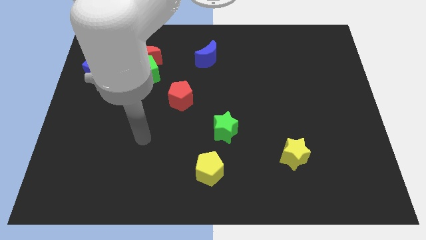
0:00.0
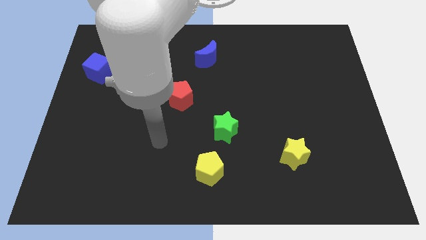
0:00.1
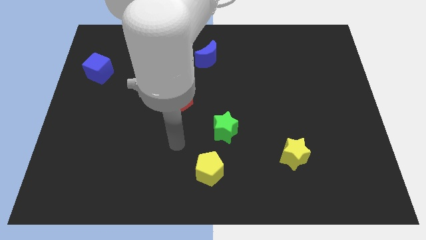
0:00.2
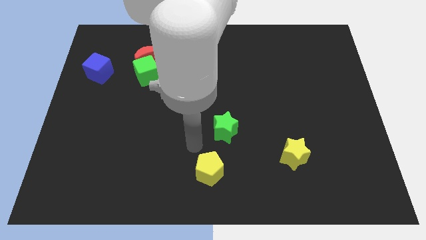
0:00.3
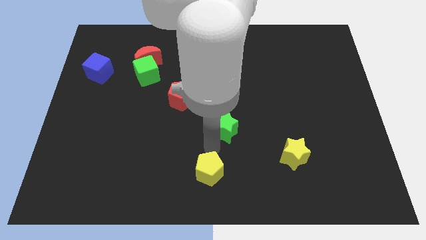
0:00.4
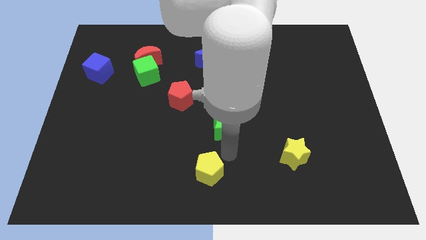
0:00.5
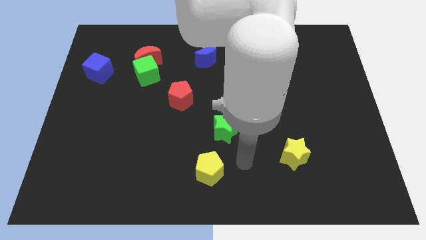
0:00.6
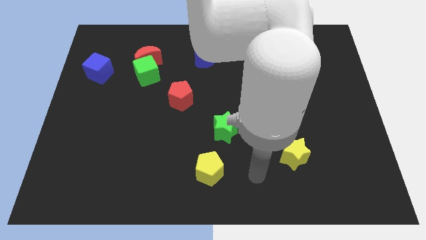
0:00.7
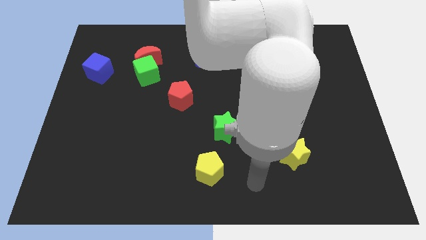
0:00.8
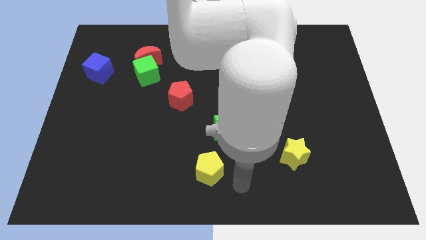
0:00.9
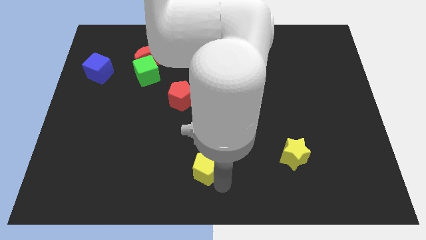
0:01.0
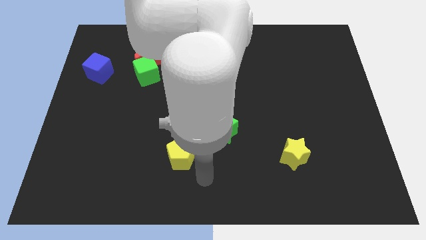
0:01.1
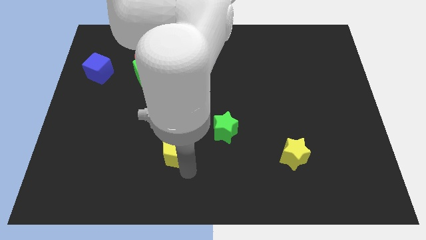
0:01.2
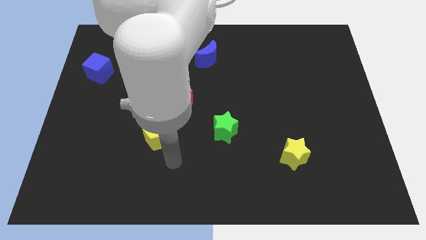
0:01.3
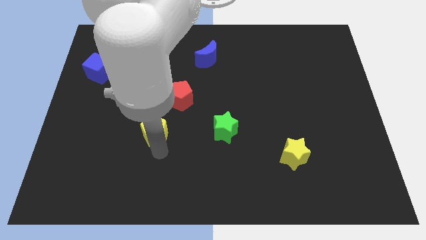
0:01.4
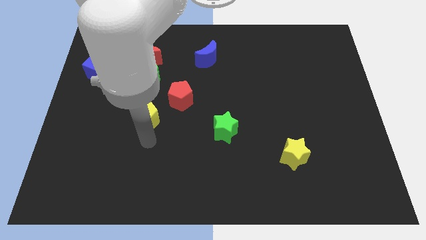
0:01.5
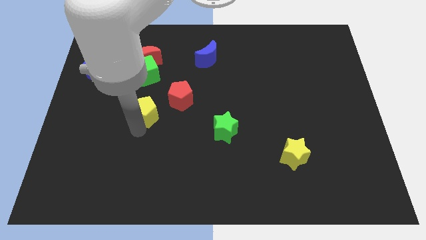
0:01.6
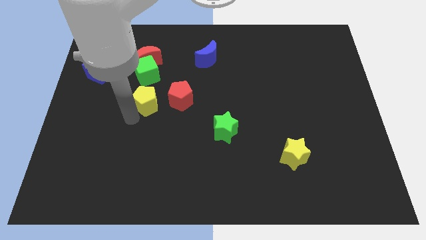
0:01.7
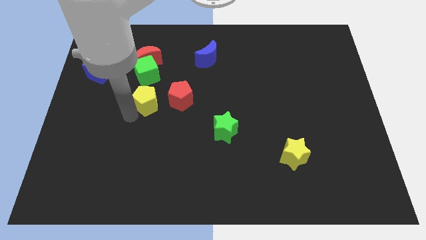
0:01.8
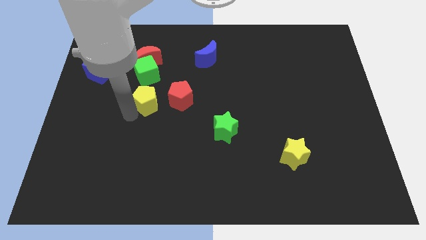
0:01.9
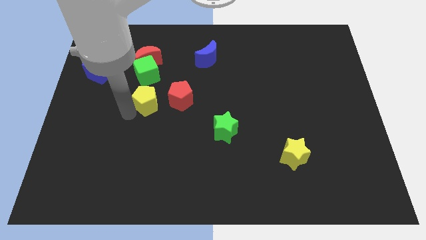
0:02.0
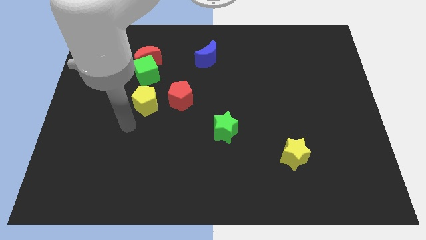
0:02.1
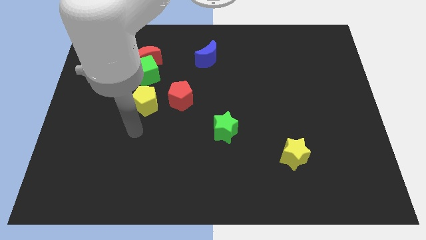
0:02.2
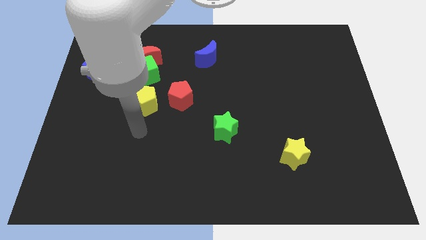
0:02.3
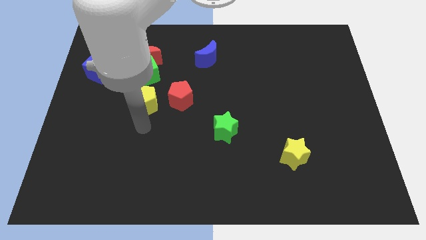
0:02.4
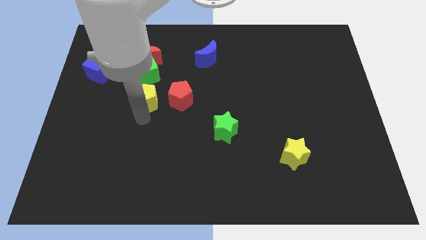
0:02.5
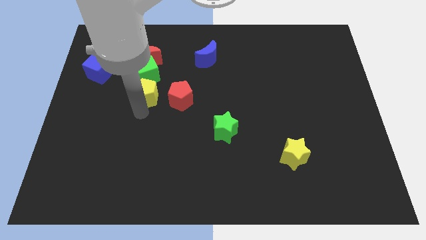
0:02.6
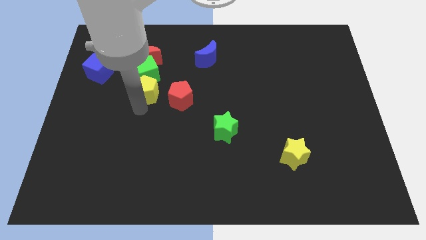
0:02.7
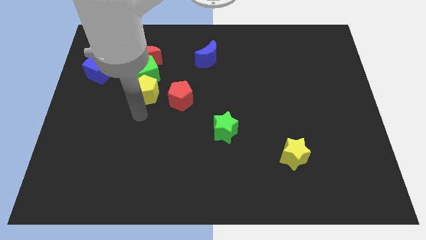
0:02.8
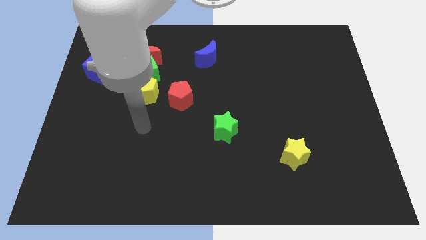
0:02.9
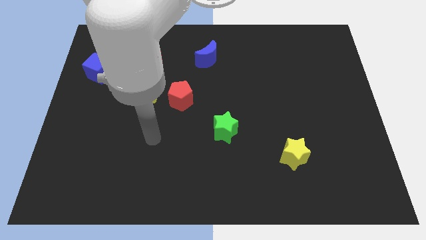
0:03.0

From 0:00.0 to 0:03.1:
move yellow pentagon below green cube

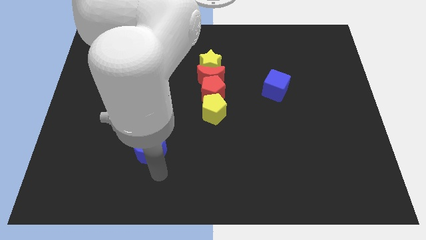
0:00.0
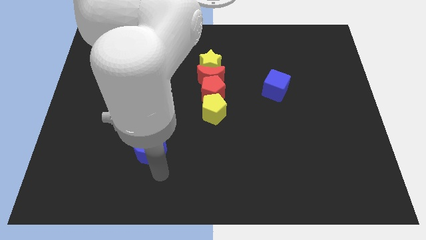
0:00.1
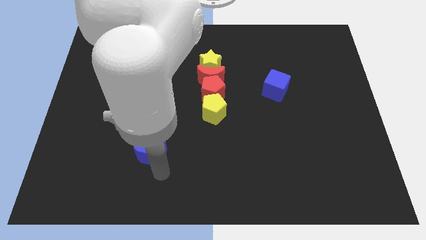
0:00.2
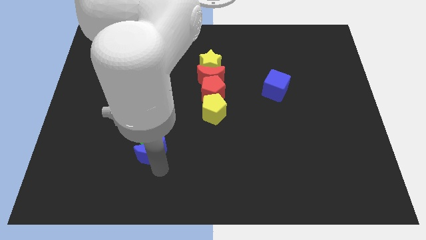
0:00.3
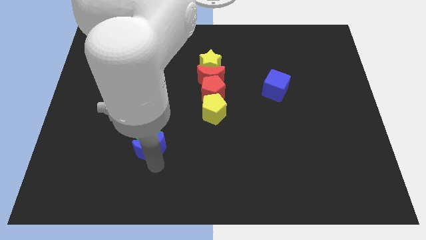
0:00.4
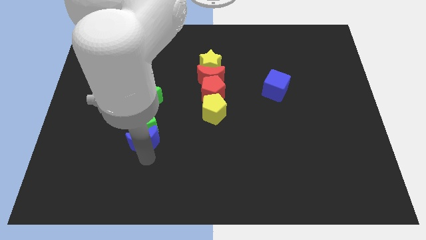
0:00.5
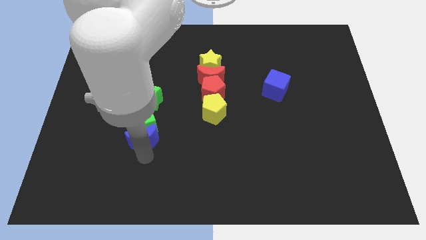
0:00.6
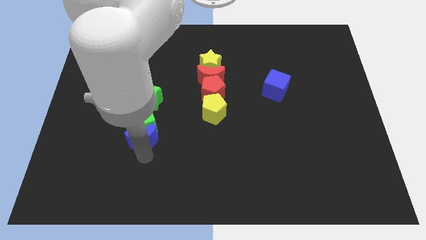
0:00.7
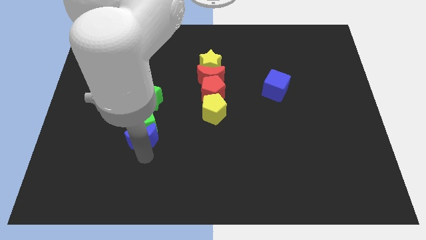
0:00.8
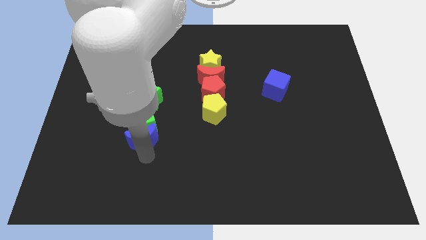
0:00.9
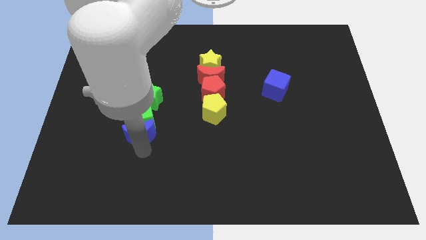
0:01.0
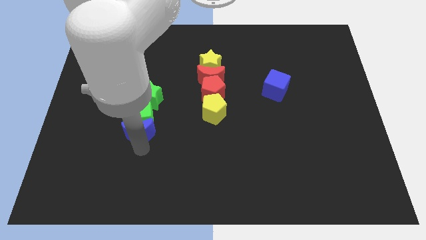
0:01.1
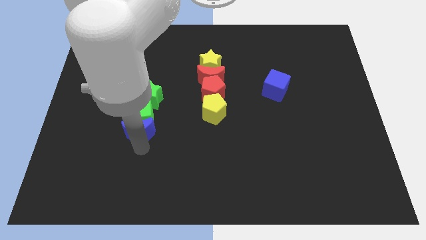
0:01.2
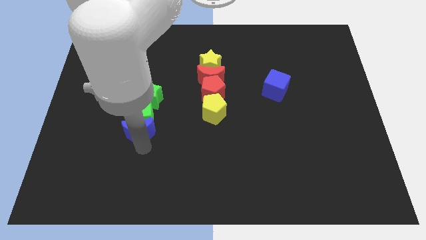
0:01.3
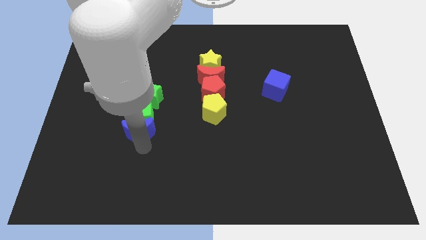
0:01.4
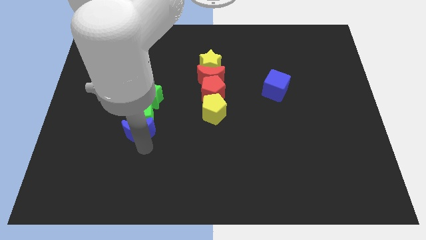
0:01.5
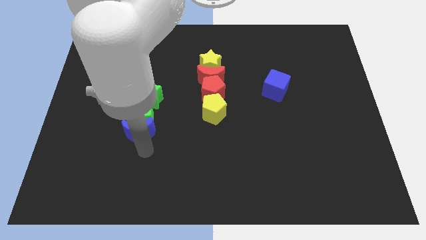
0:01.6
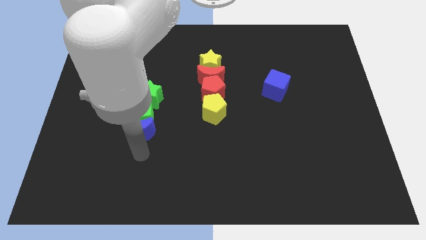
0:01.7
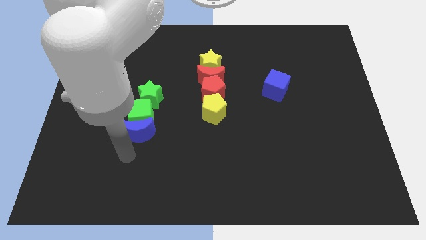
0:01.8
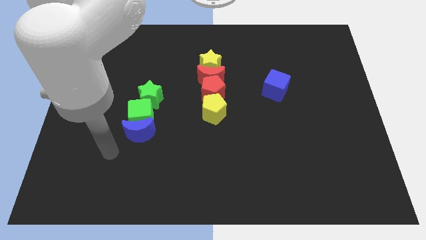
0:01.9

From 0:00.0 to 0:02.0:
move the blue moon along with the green cube into the green star

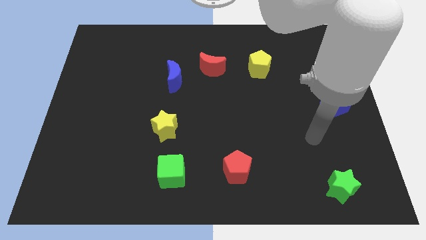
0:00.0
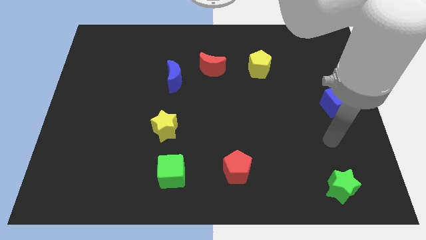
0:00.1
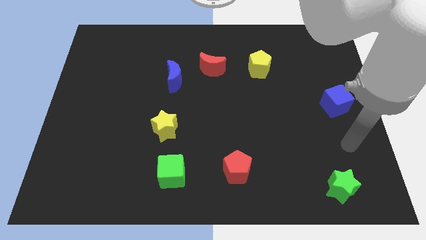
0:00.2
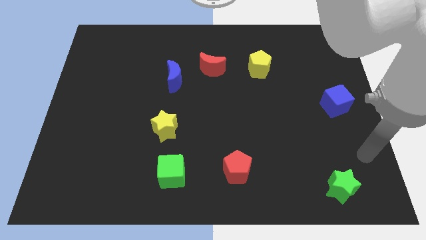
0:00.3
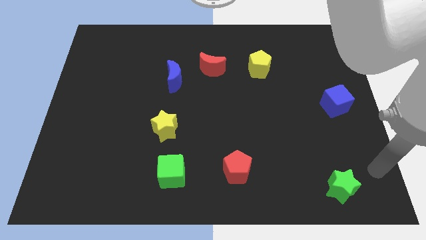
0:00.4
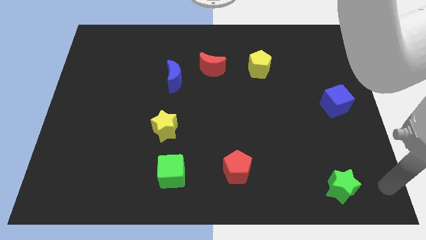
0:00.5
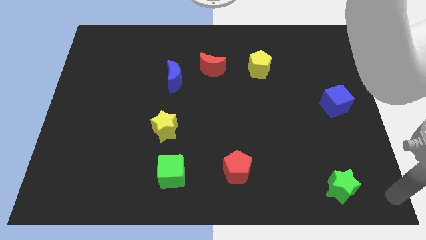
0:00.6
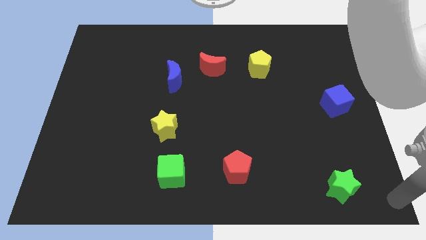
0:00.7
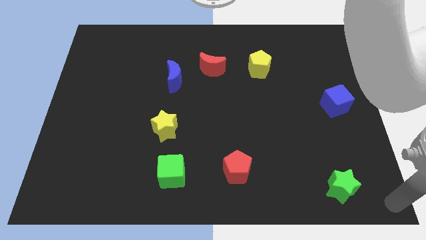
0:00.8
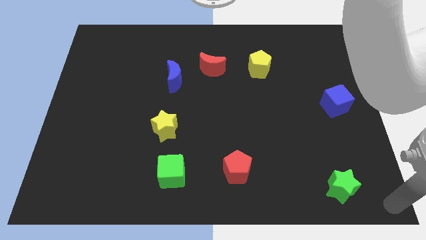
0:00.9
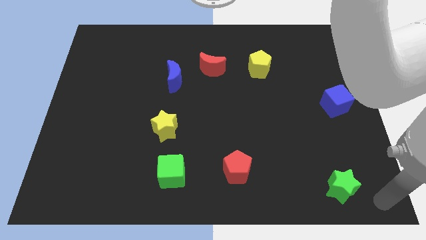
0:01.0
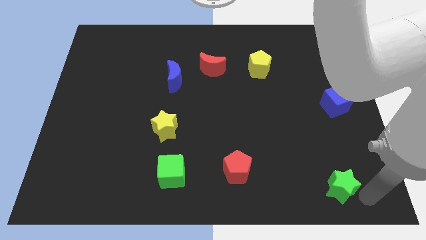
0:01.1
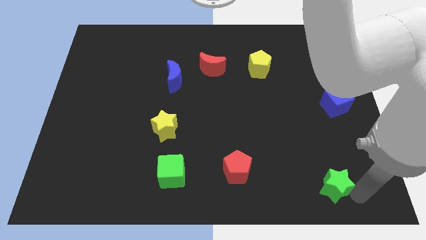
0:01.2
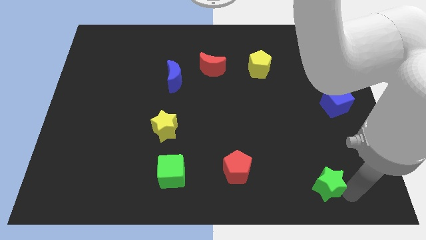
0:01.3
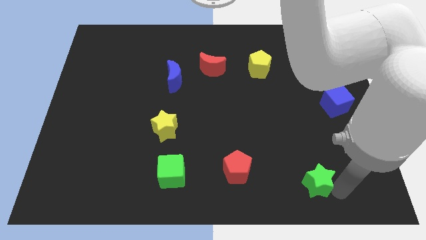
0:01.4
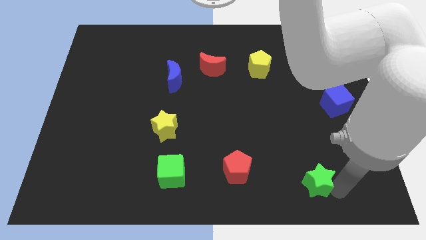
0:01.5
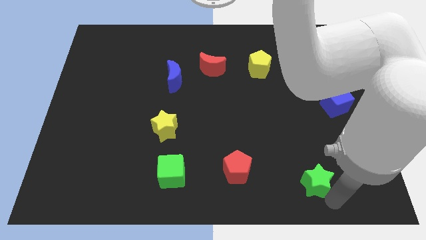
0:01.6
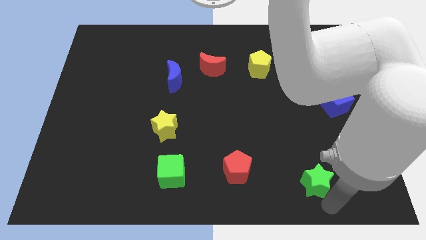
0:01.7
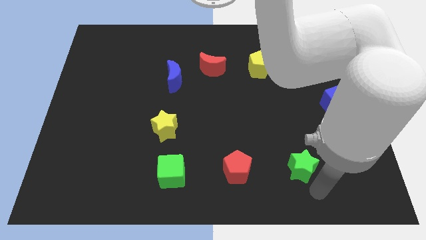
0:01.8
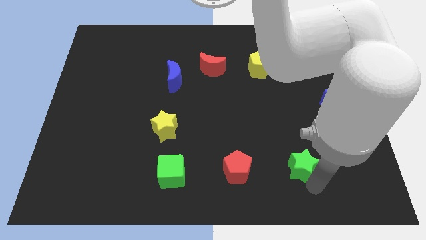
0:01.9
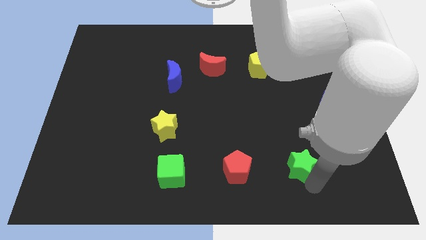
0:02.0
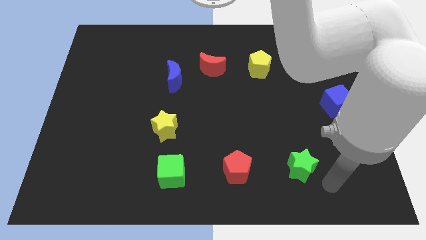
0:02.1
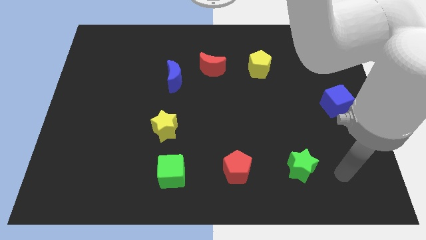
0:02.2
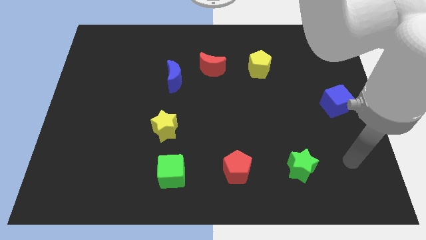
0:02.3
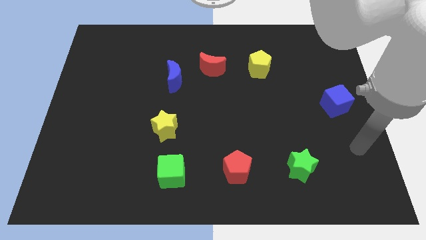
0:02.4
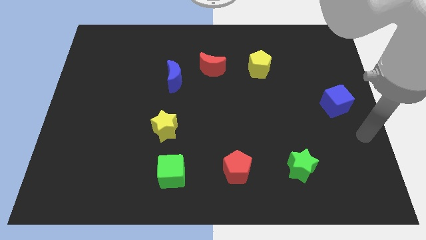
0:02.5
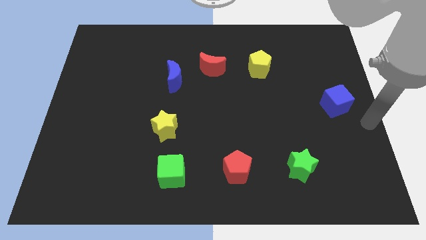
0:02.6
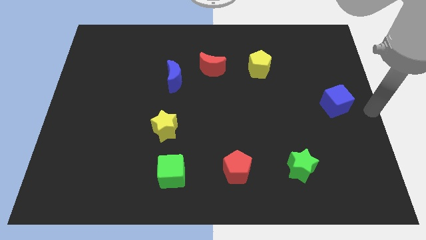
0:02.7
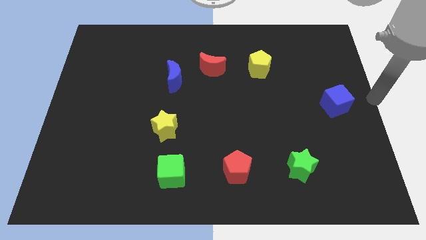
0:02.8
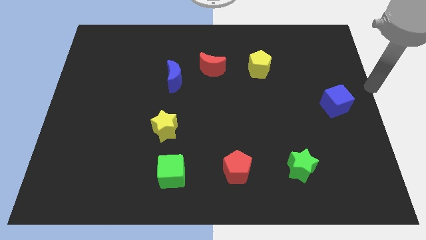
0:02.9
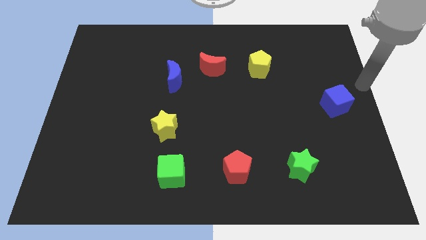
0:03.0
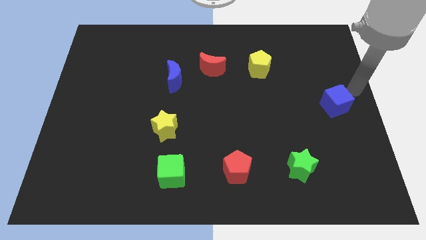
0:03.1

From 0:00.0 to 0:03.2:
place green star to the right of red pentagon

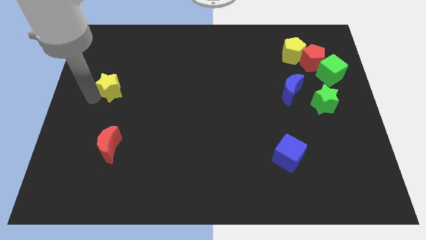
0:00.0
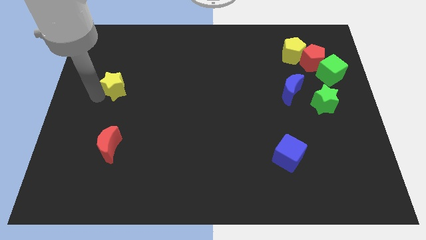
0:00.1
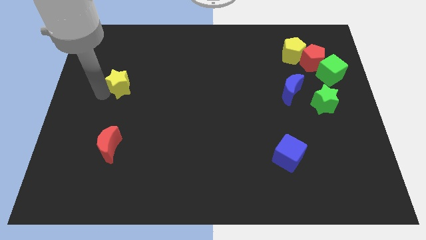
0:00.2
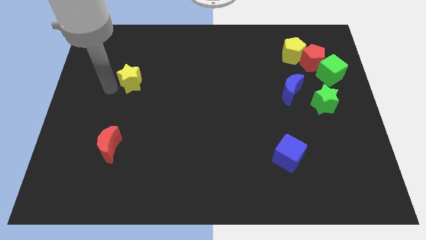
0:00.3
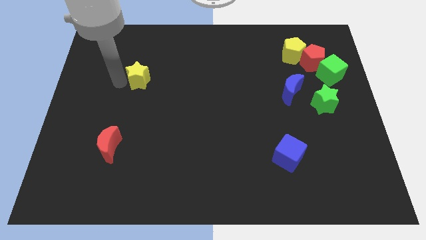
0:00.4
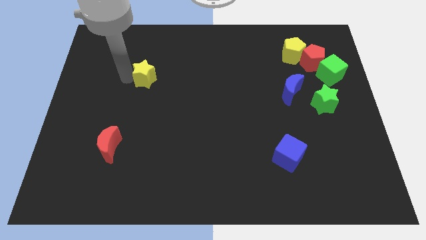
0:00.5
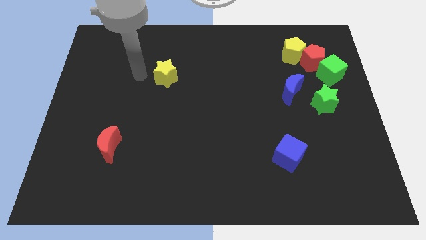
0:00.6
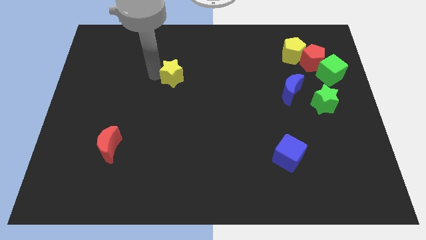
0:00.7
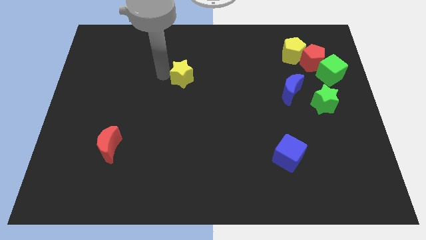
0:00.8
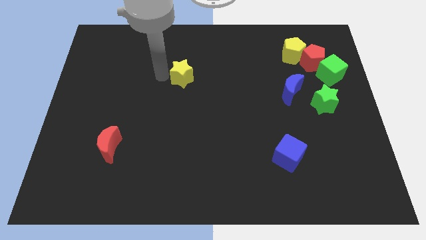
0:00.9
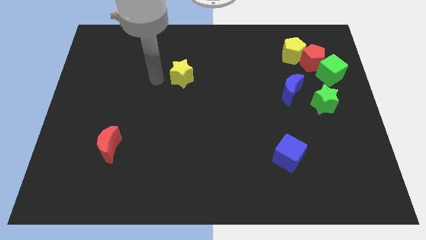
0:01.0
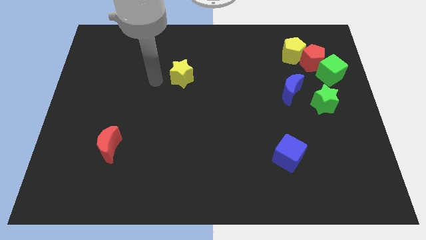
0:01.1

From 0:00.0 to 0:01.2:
push the yellow star slightly to the right of the board
